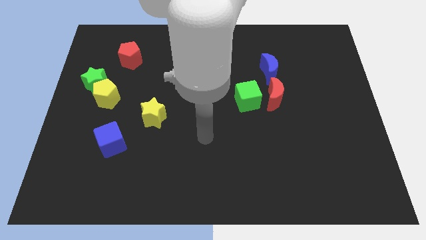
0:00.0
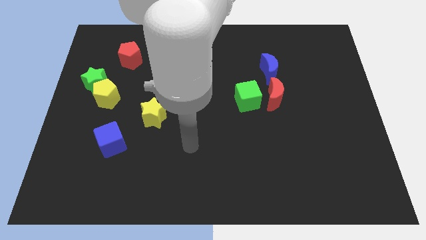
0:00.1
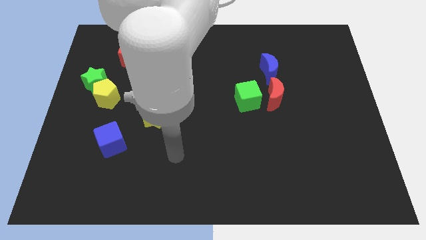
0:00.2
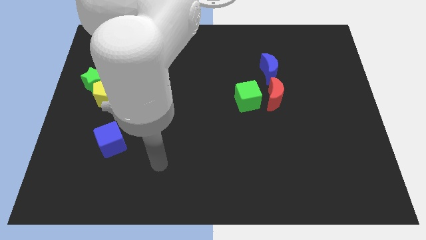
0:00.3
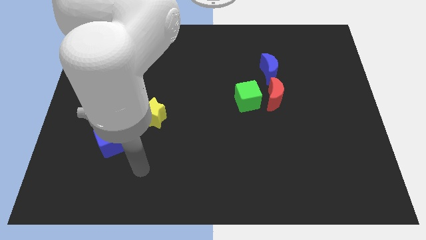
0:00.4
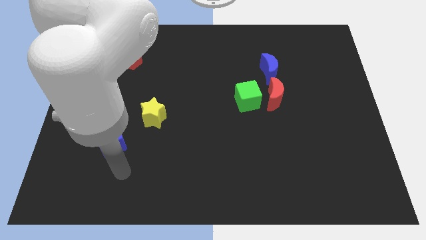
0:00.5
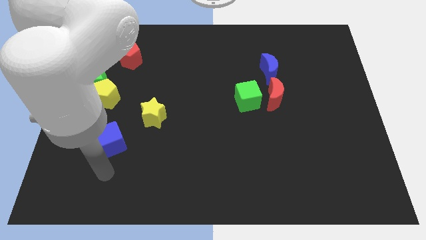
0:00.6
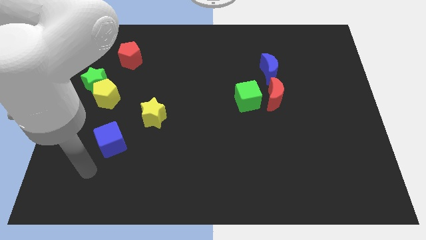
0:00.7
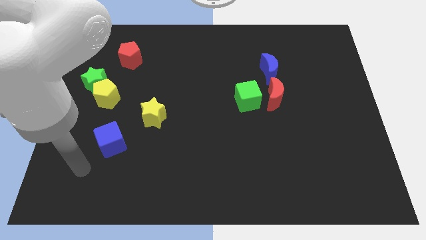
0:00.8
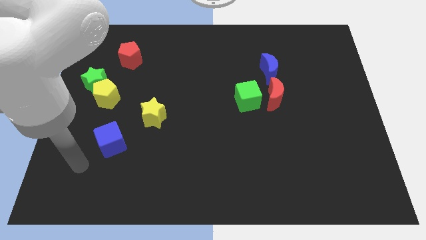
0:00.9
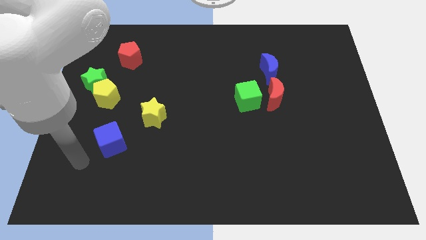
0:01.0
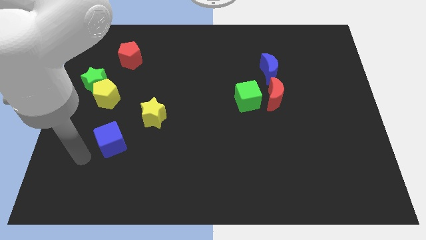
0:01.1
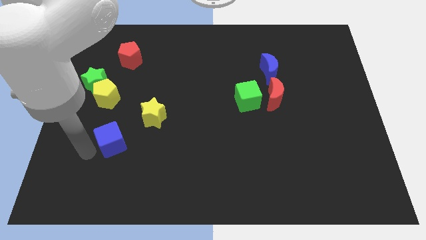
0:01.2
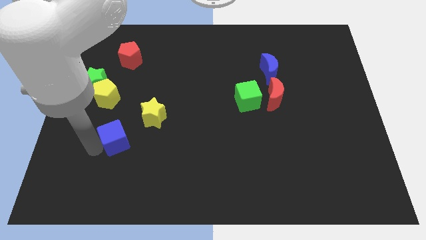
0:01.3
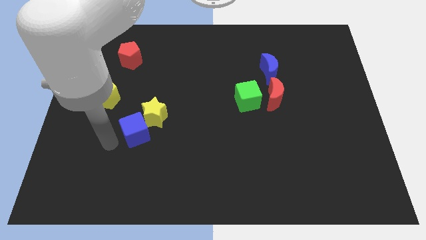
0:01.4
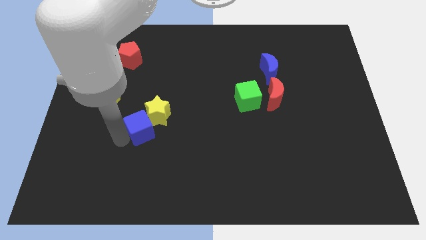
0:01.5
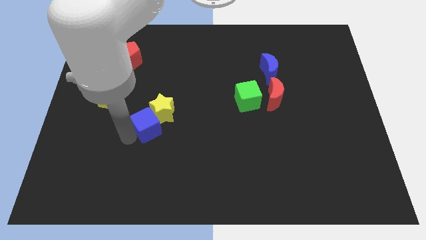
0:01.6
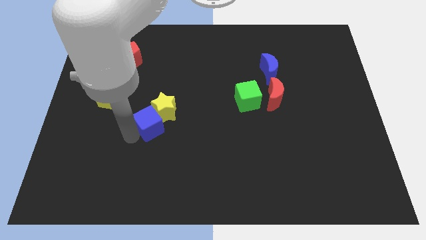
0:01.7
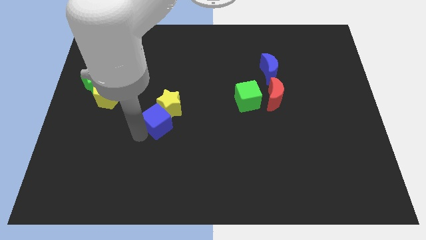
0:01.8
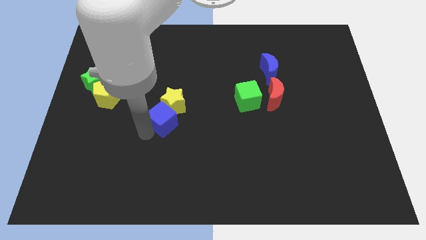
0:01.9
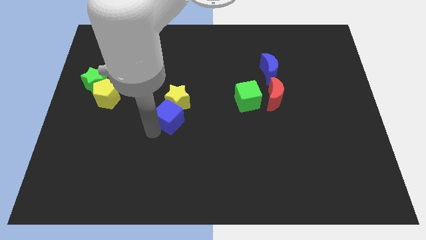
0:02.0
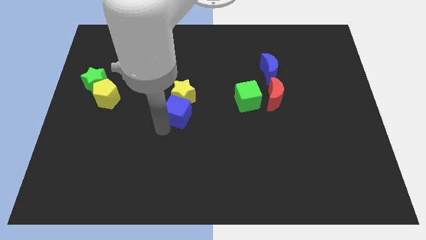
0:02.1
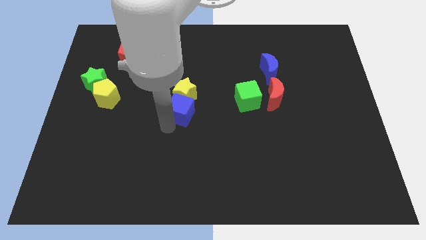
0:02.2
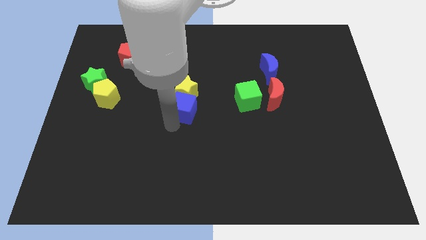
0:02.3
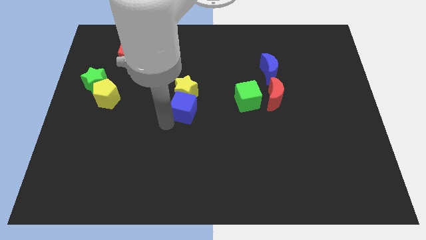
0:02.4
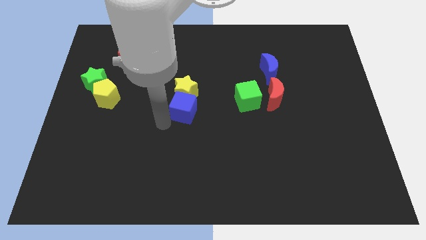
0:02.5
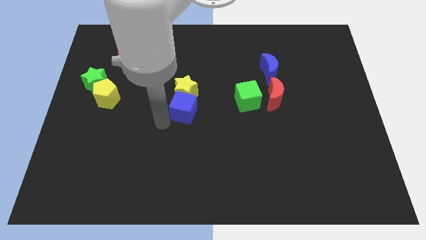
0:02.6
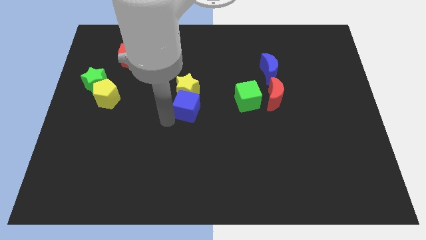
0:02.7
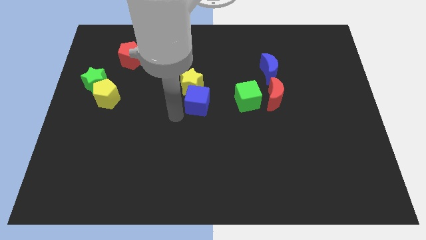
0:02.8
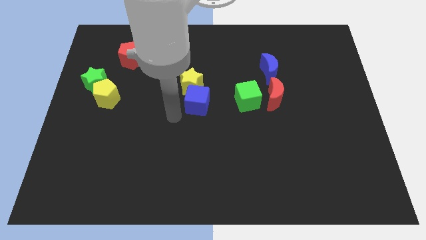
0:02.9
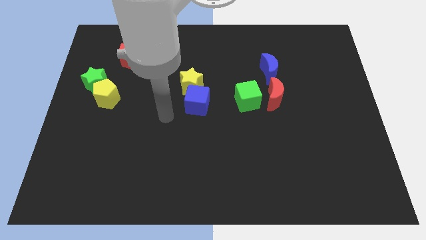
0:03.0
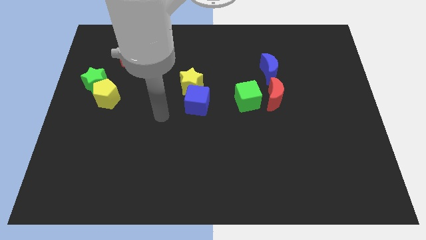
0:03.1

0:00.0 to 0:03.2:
move the blue cube along with the yellow star towards the center of the board

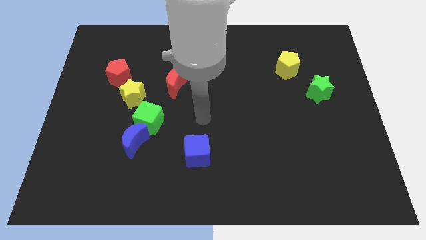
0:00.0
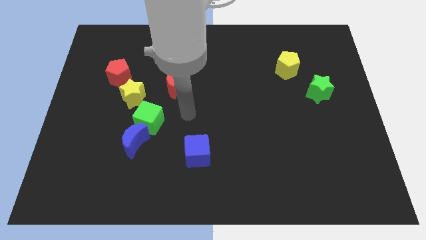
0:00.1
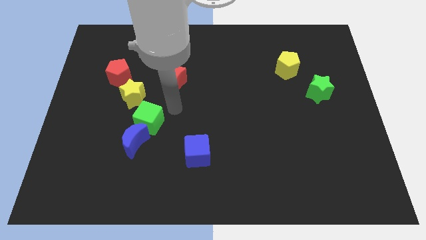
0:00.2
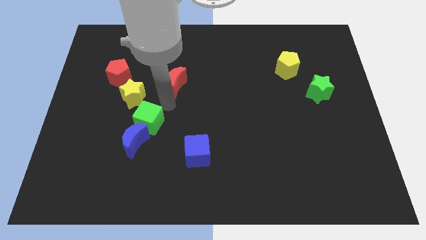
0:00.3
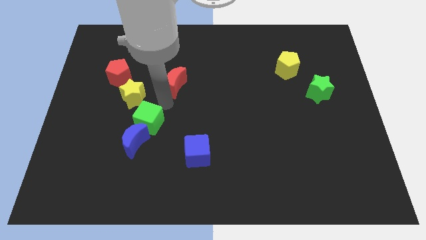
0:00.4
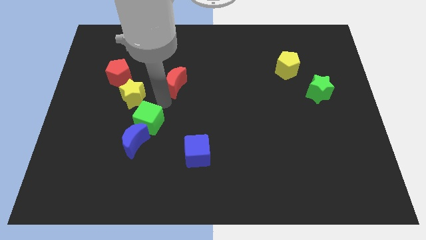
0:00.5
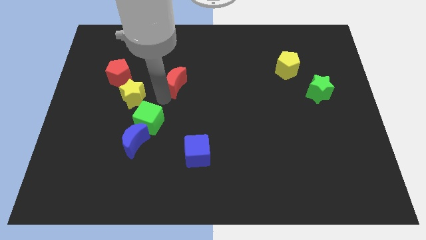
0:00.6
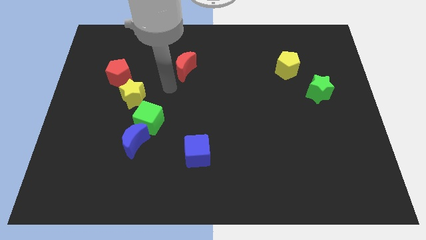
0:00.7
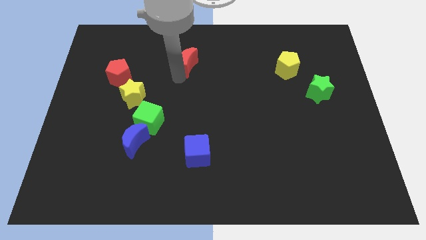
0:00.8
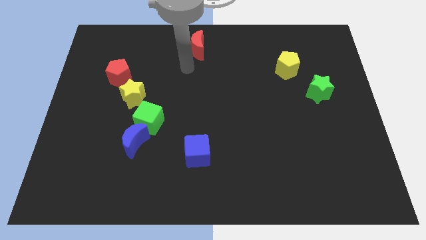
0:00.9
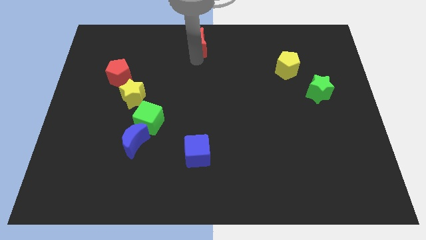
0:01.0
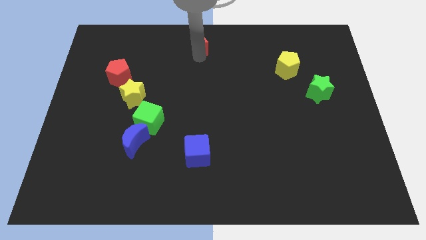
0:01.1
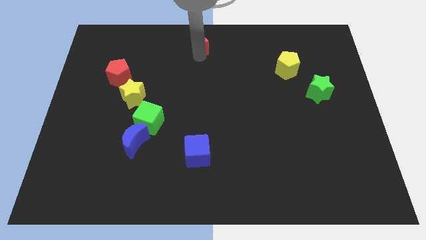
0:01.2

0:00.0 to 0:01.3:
move red moon to the top center of the board

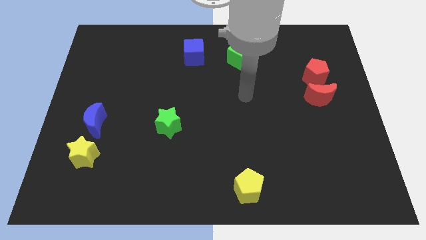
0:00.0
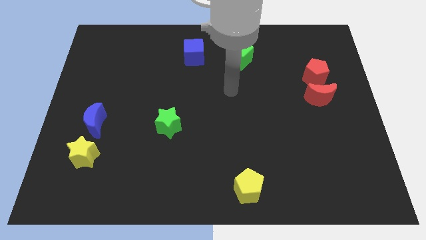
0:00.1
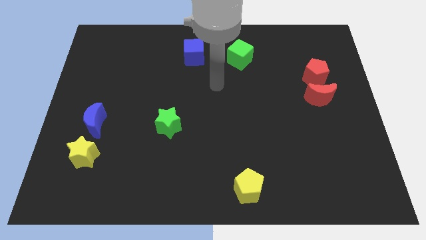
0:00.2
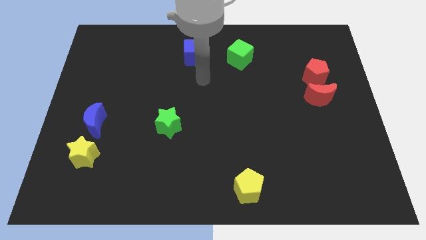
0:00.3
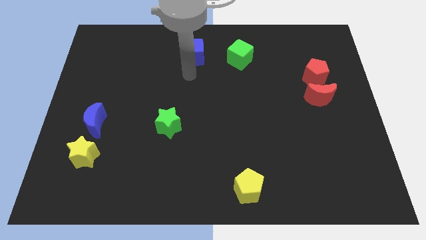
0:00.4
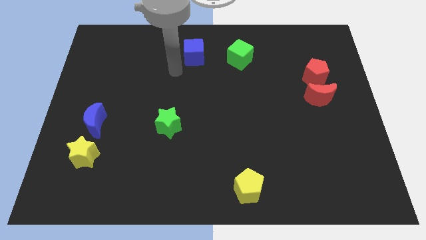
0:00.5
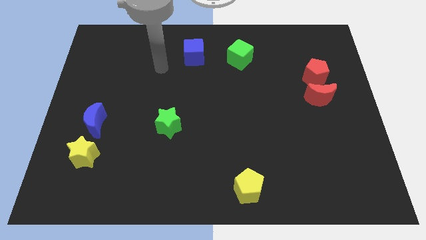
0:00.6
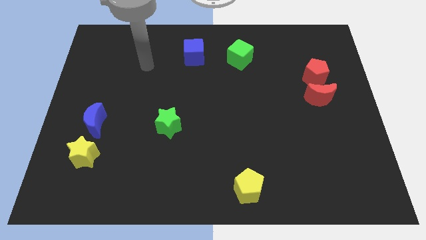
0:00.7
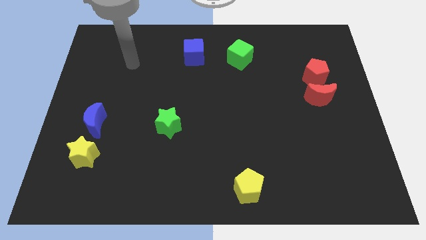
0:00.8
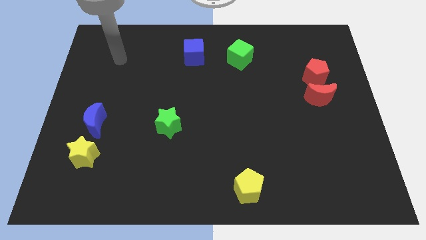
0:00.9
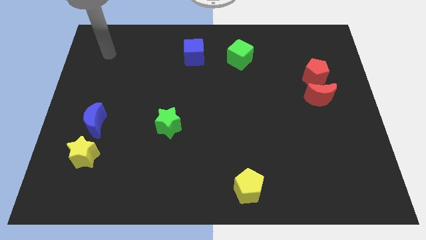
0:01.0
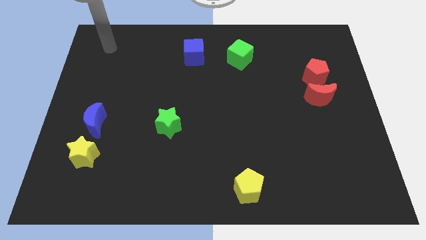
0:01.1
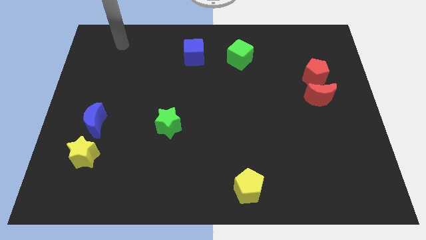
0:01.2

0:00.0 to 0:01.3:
move yourself to the top left corner of the board

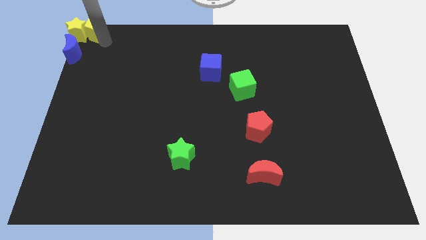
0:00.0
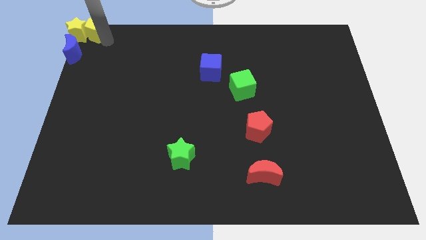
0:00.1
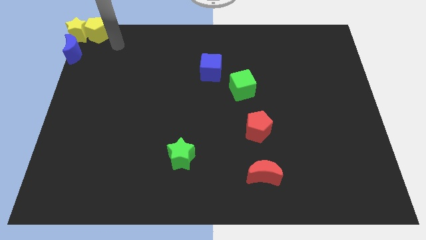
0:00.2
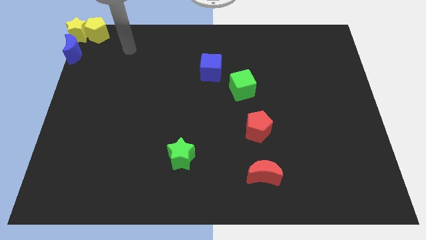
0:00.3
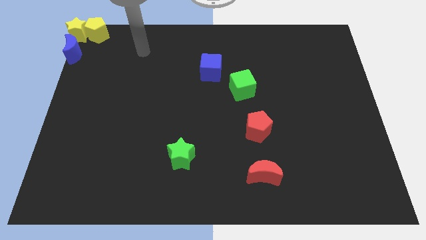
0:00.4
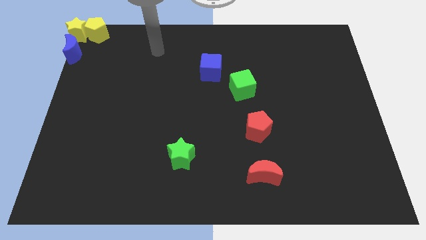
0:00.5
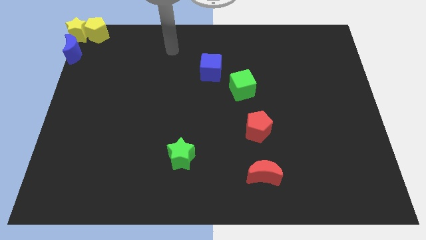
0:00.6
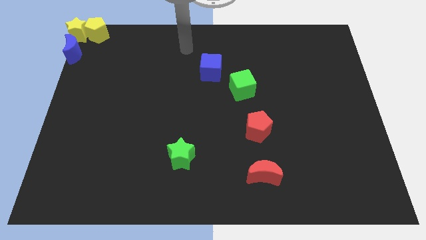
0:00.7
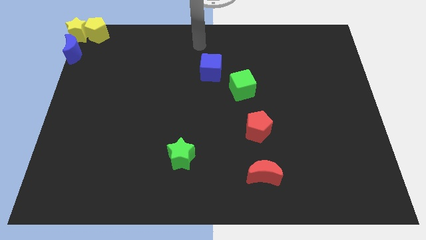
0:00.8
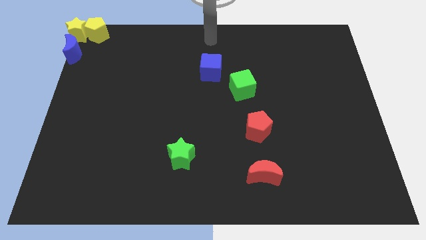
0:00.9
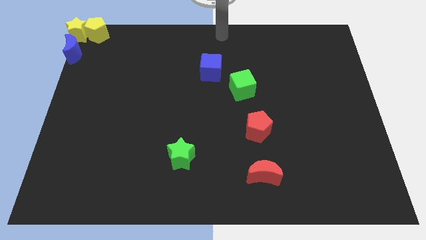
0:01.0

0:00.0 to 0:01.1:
put arm at center top

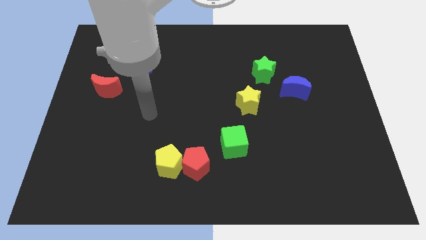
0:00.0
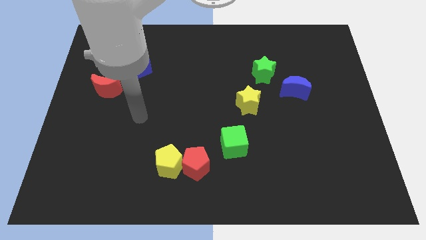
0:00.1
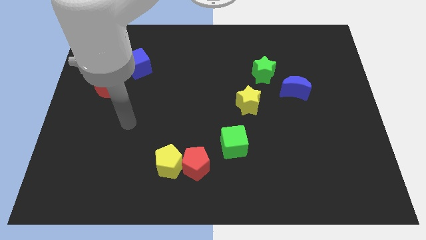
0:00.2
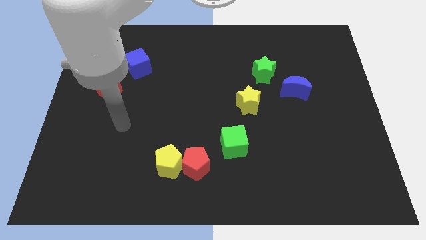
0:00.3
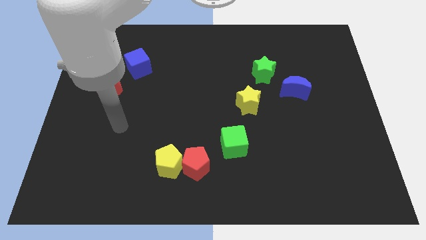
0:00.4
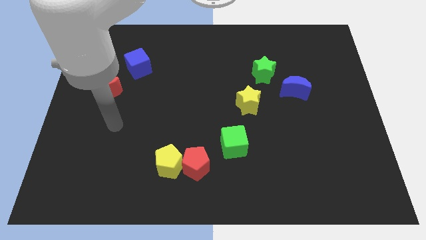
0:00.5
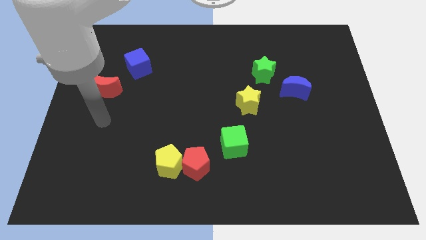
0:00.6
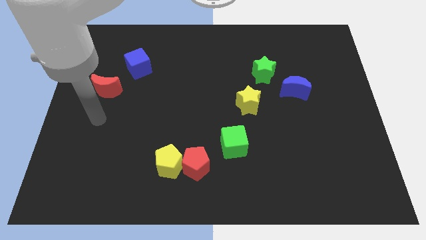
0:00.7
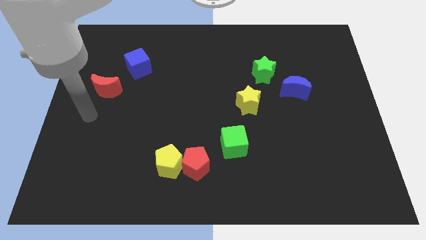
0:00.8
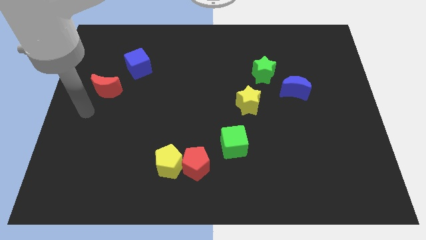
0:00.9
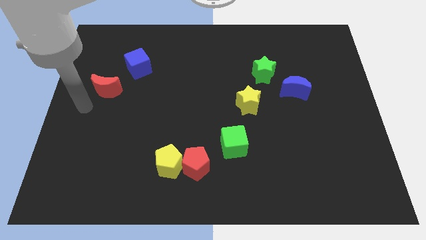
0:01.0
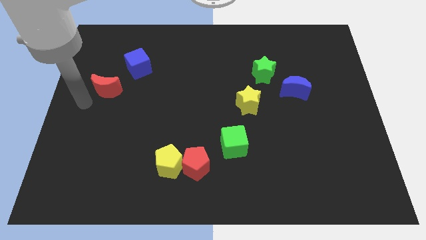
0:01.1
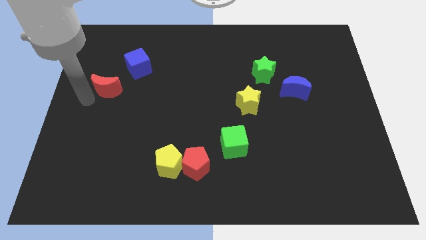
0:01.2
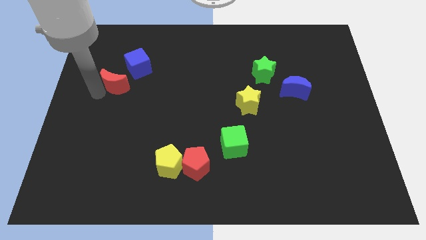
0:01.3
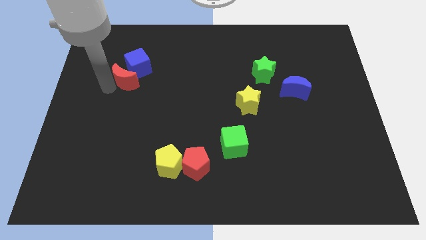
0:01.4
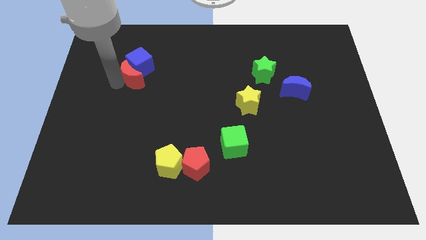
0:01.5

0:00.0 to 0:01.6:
push the red crescent into the blue cube

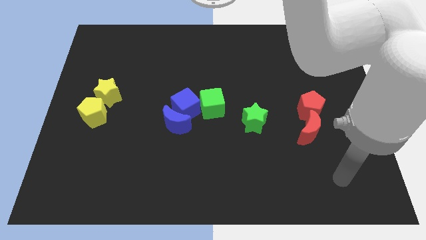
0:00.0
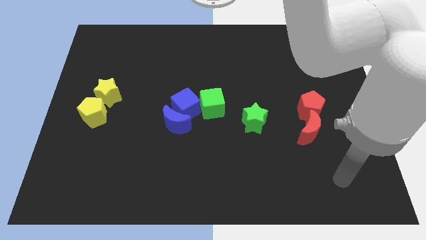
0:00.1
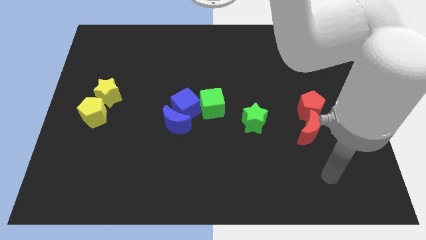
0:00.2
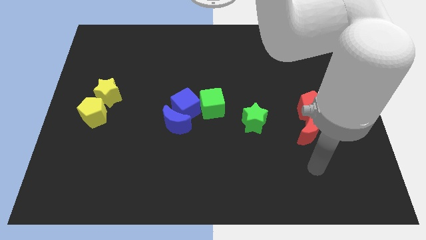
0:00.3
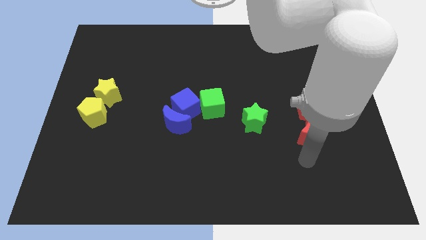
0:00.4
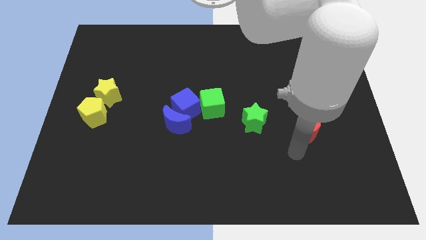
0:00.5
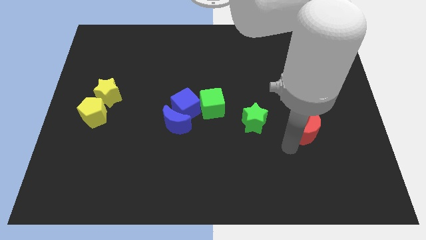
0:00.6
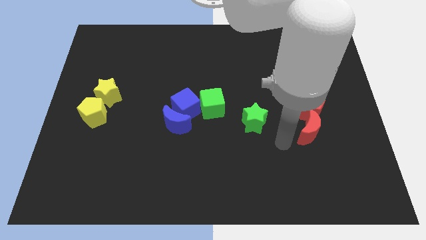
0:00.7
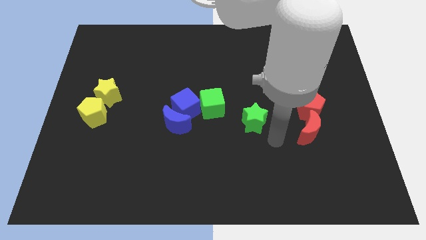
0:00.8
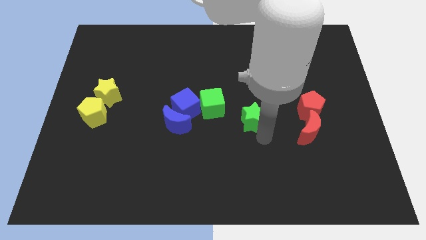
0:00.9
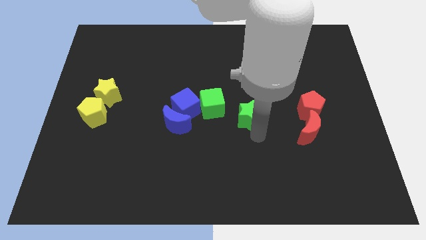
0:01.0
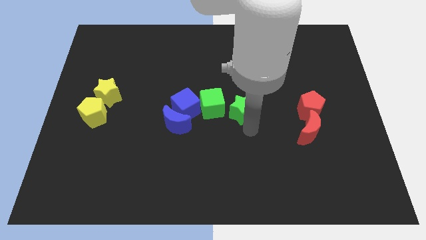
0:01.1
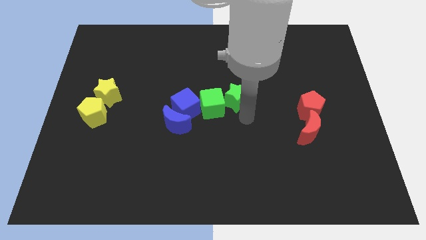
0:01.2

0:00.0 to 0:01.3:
move the green star to the bottom right side of the green cube
